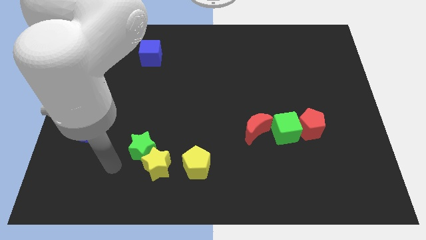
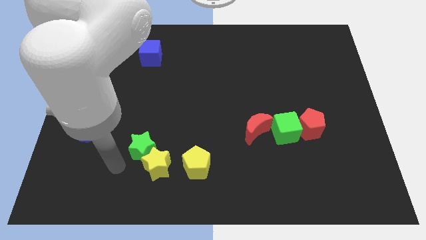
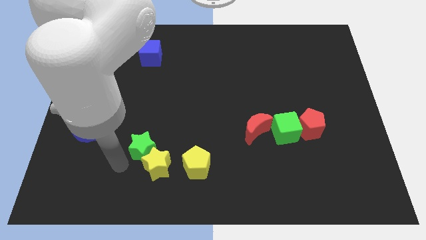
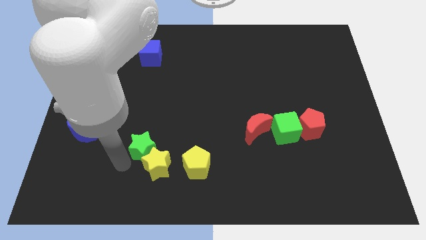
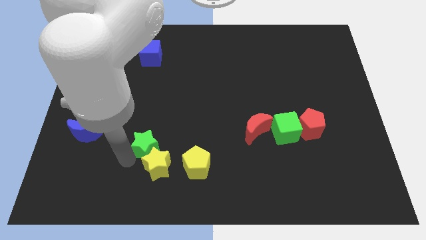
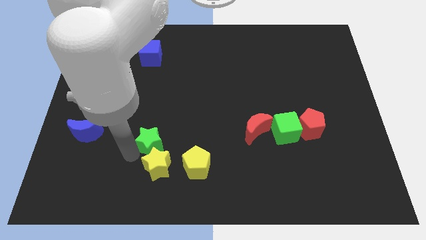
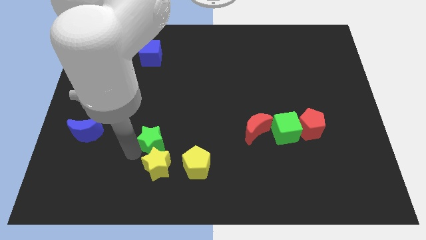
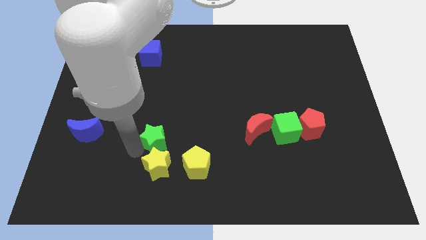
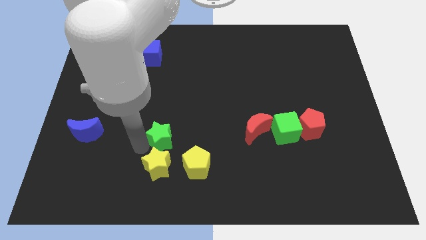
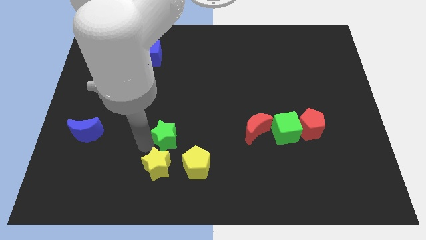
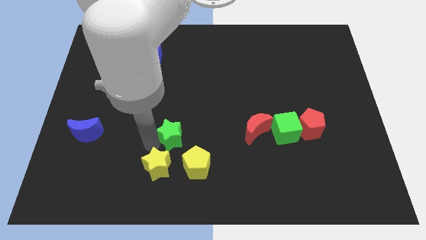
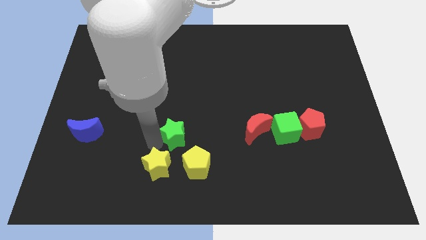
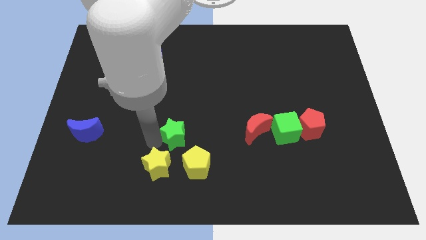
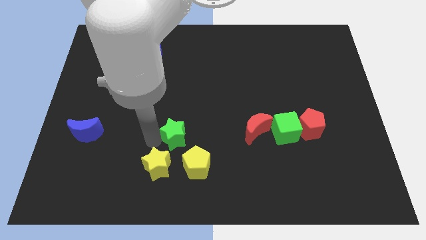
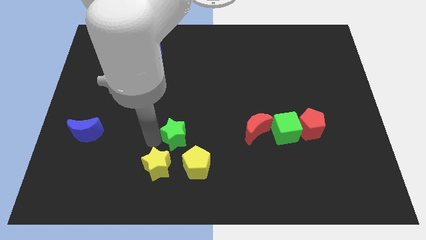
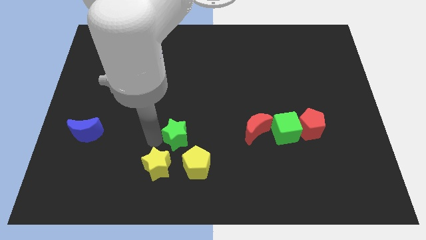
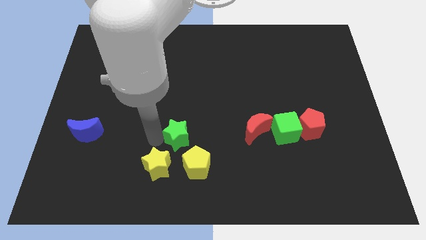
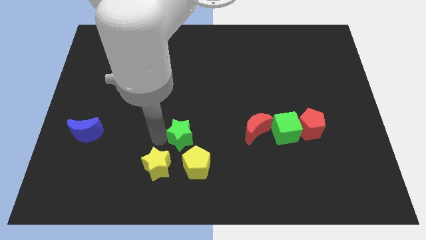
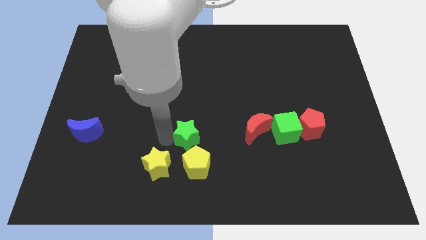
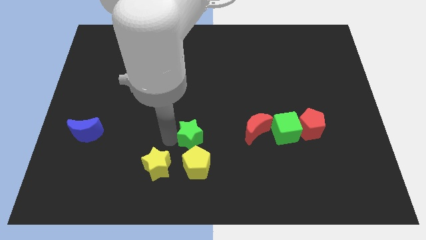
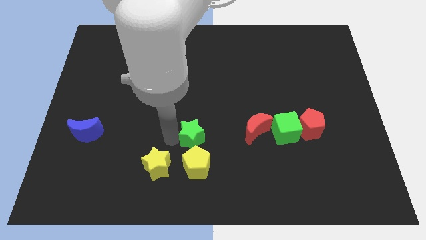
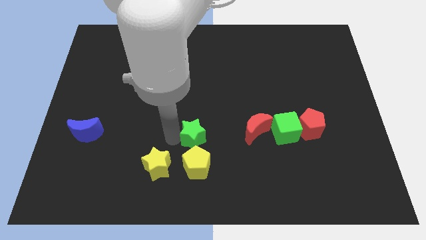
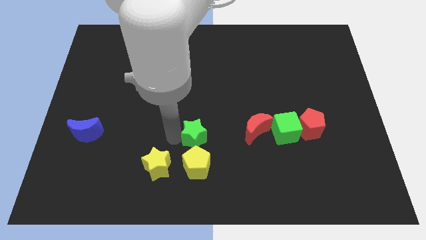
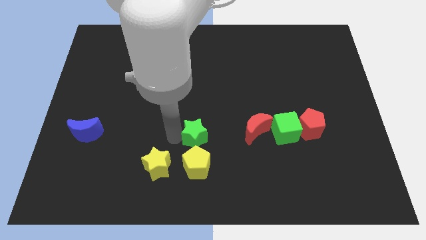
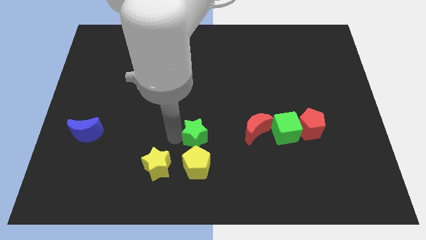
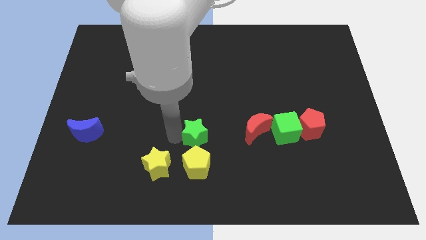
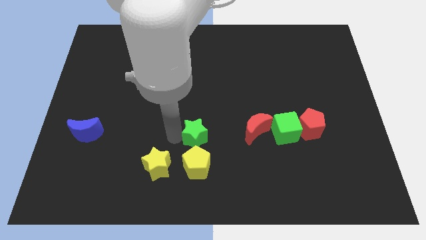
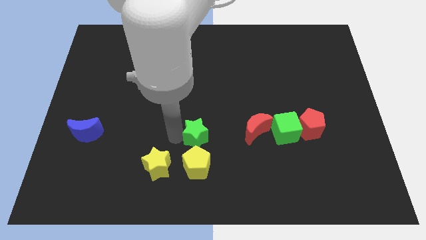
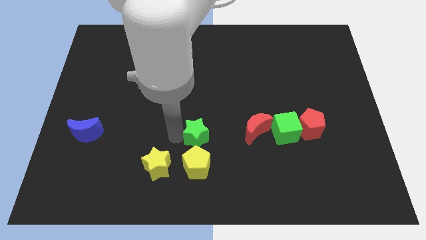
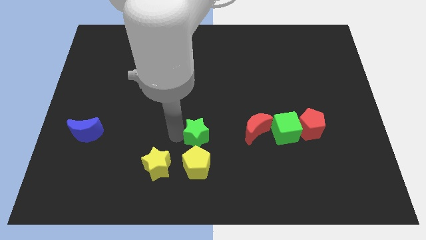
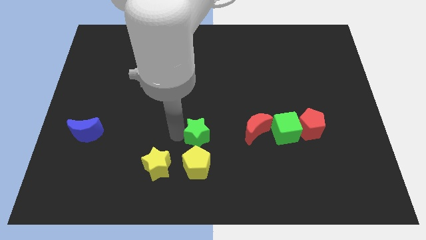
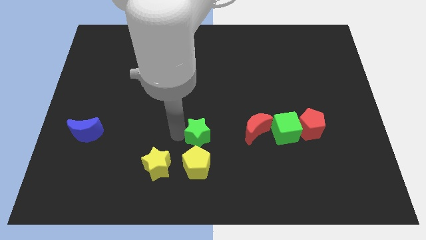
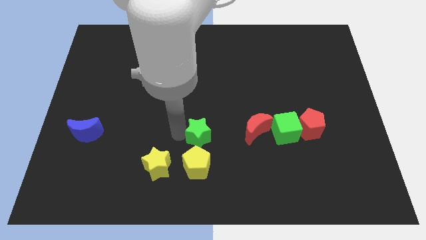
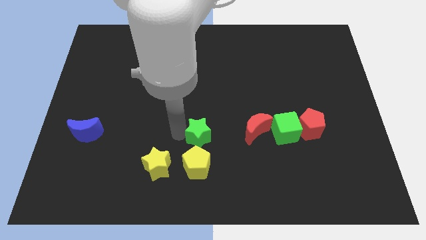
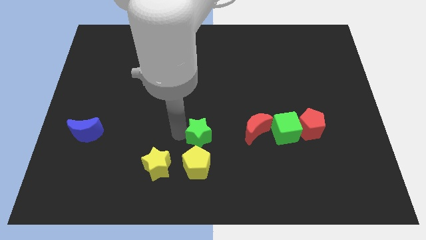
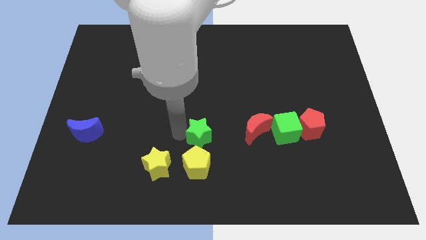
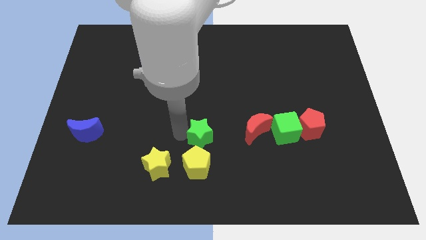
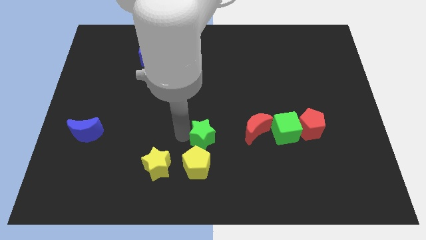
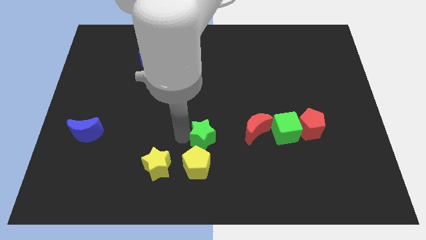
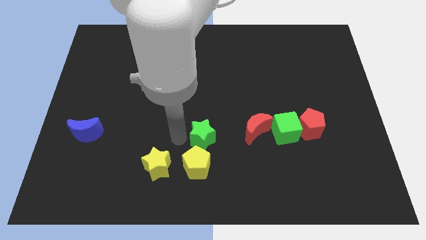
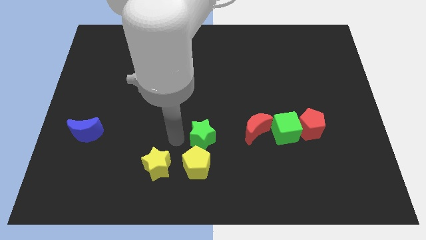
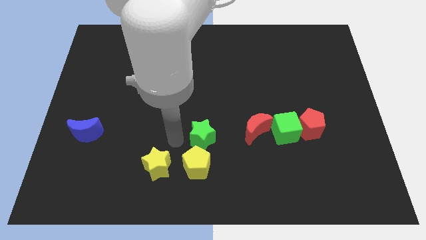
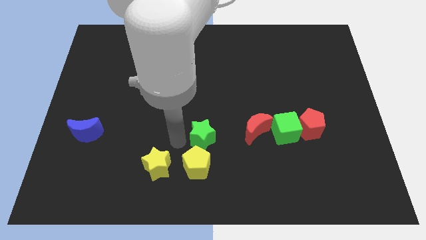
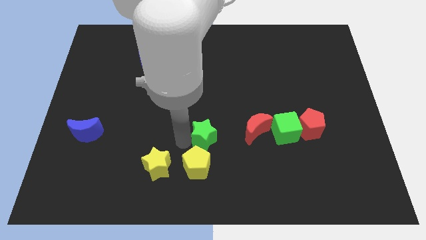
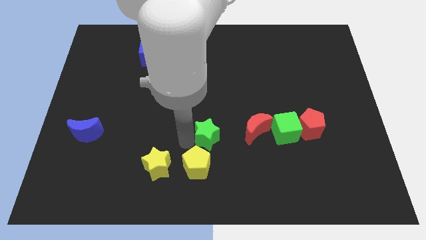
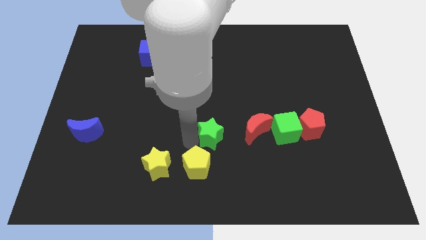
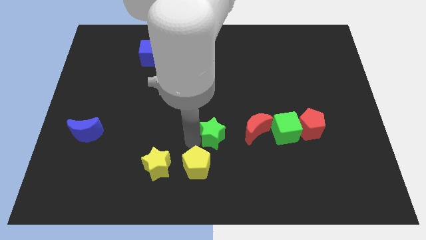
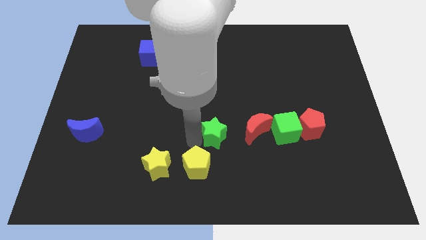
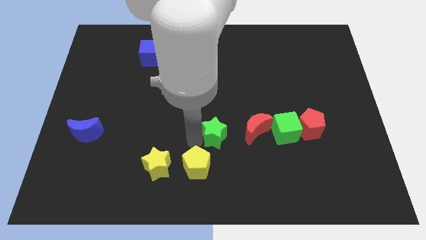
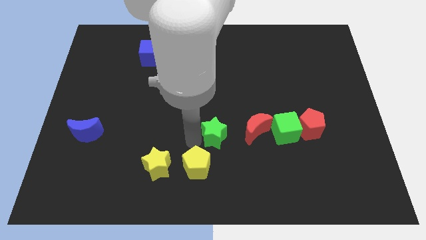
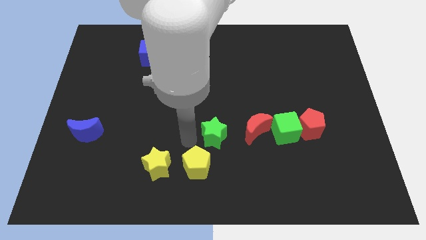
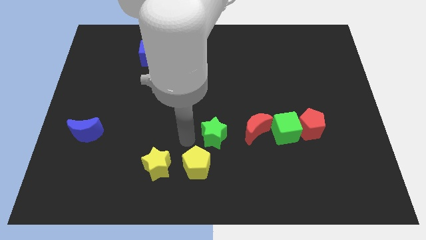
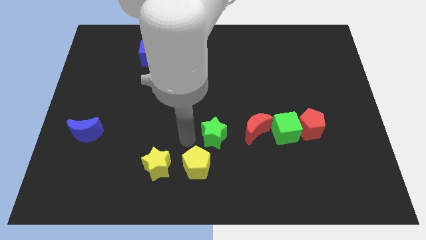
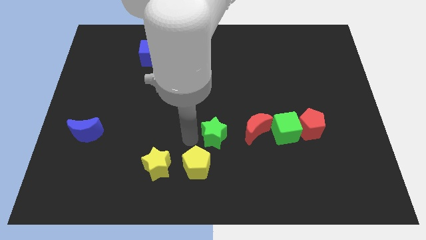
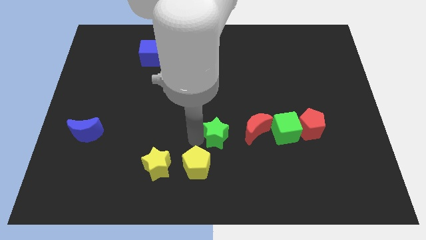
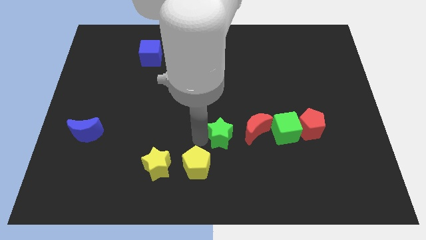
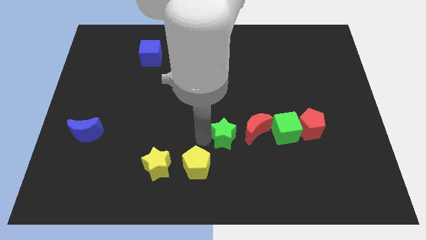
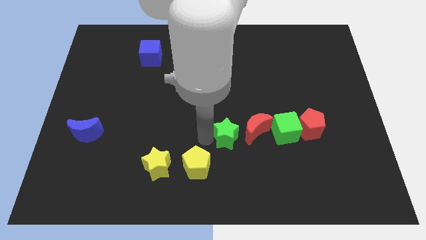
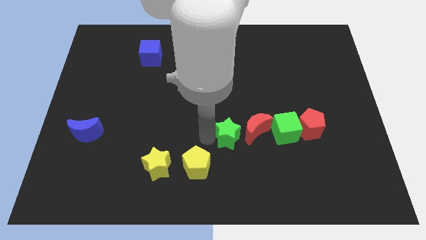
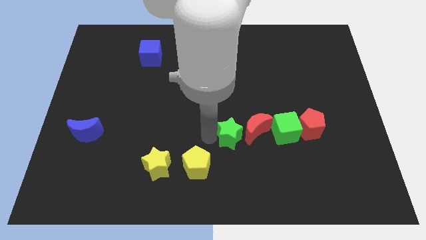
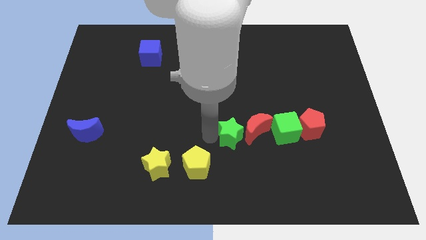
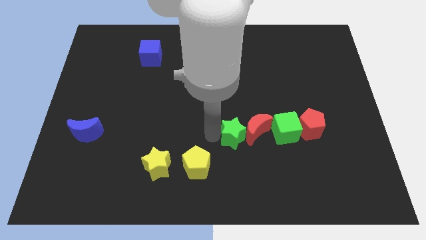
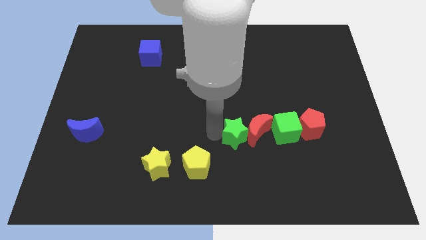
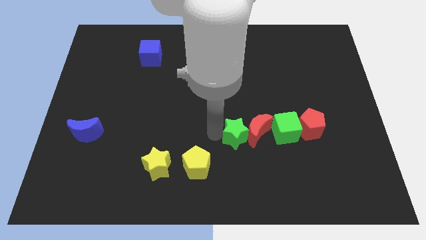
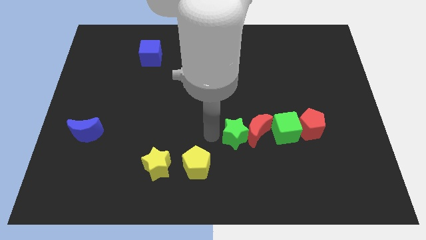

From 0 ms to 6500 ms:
push the green star into the red crescent

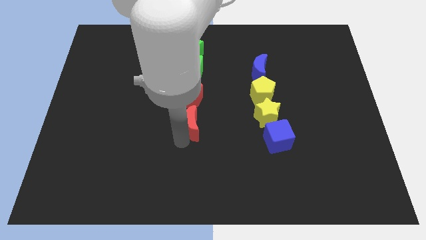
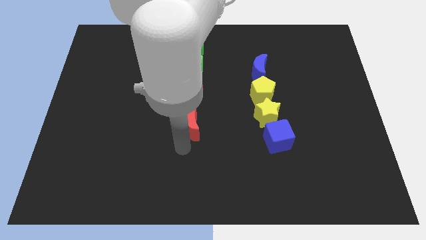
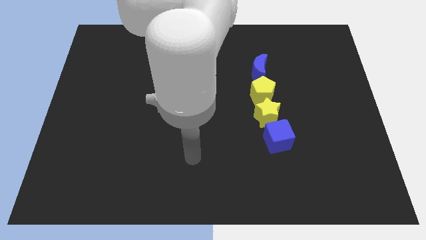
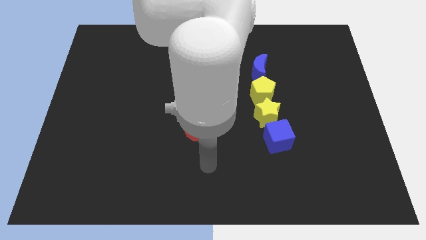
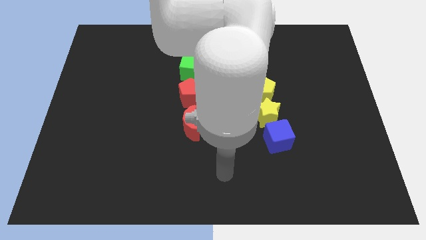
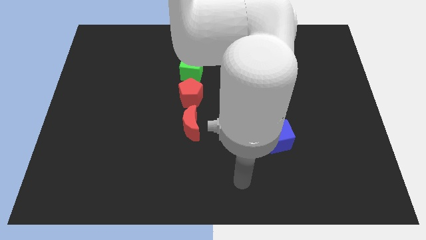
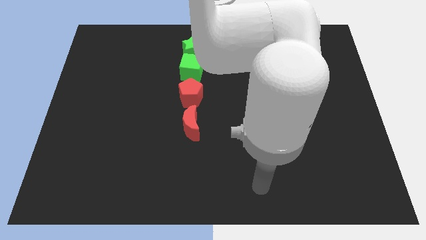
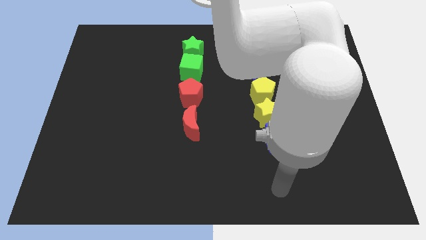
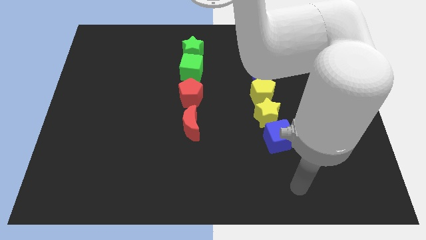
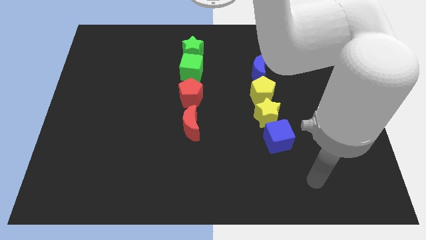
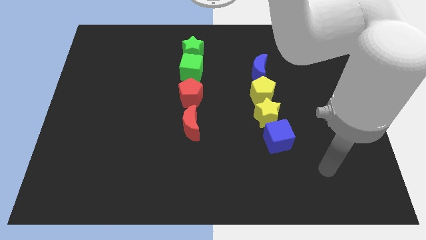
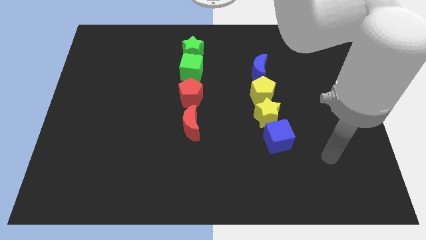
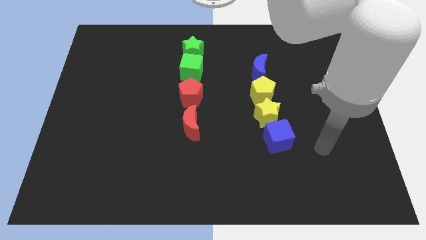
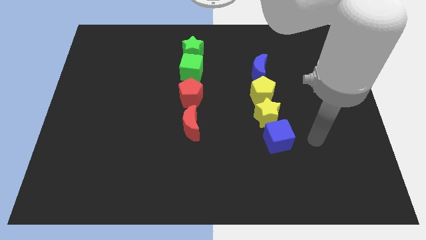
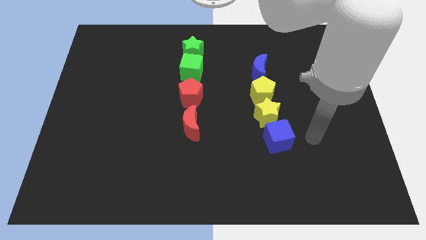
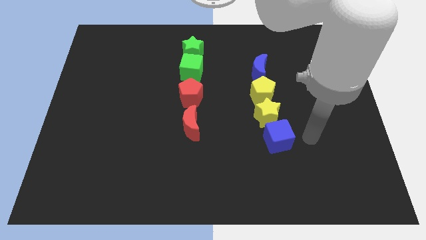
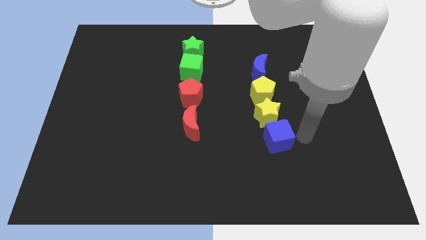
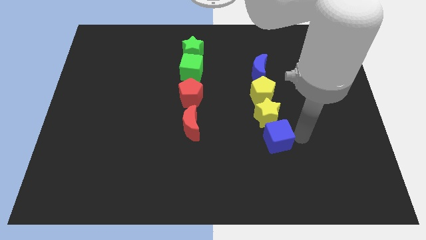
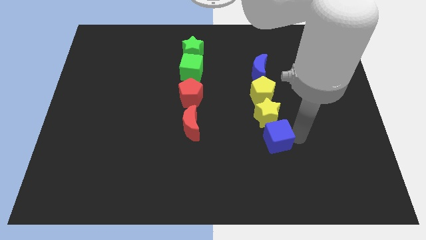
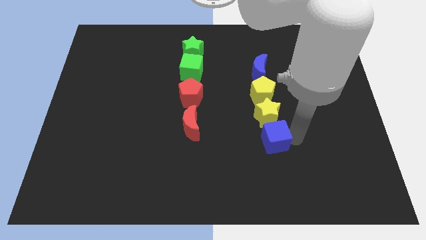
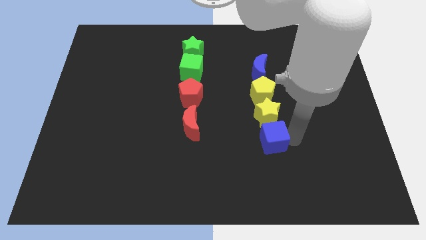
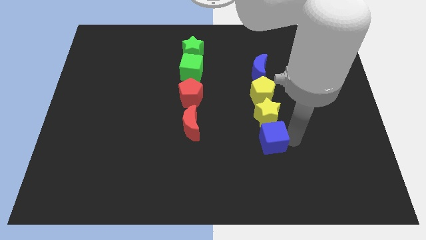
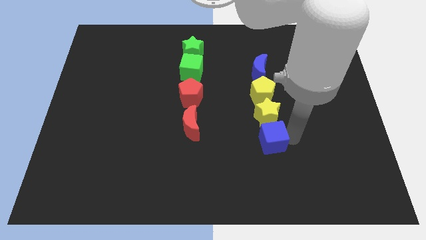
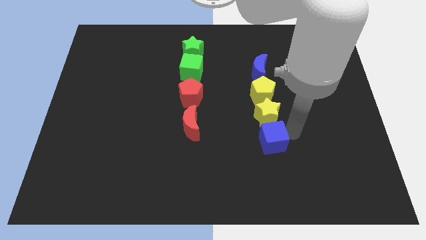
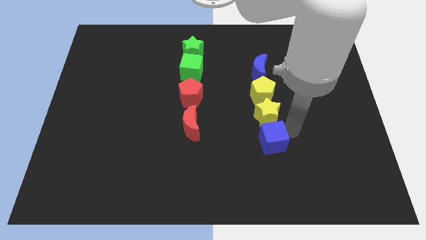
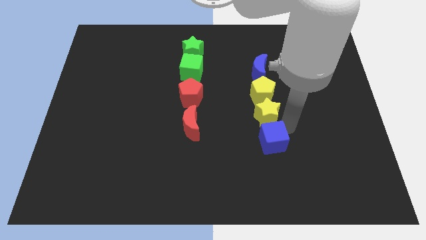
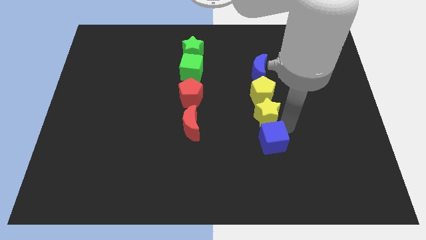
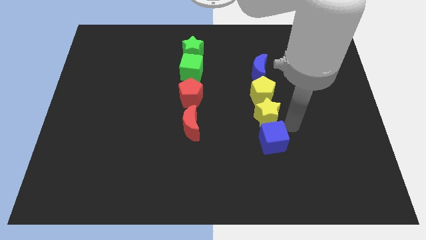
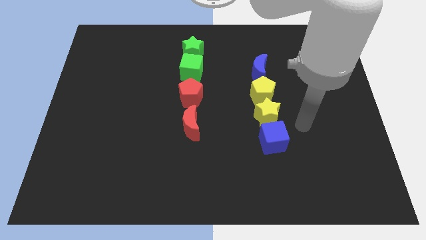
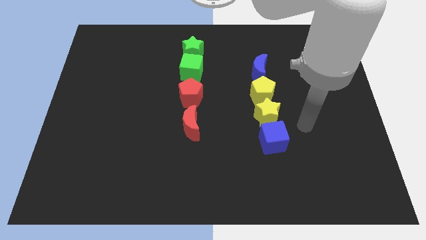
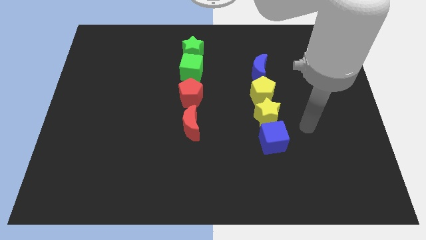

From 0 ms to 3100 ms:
move the blue cube to the left side slightly
